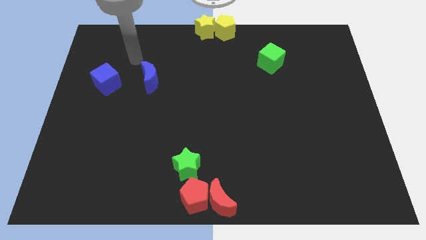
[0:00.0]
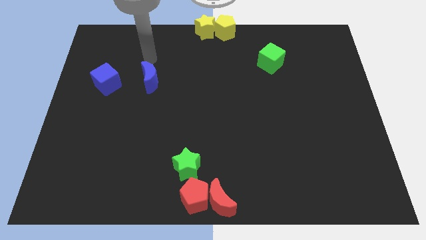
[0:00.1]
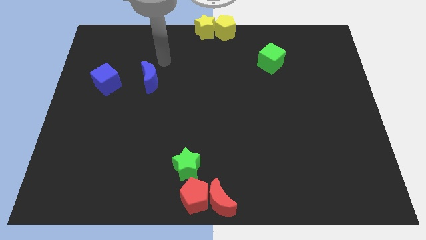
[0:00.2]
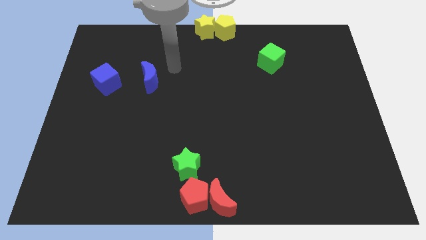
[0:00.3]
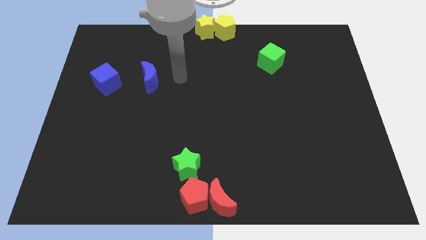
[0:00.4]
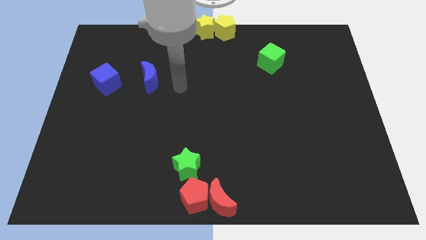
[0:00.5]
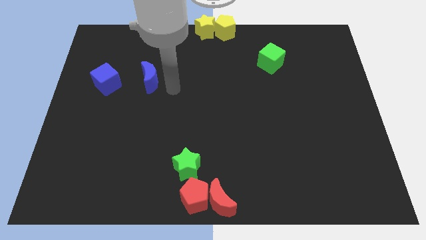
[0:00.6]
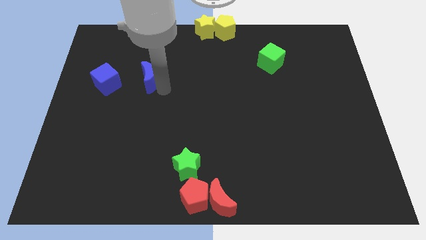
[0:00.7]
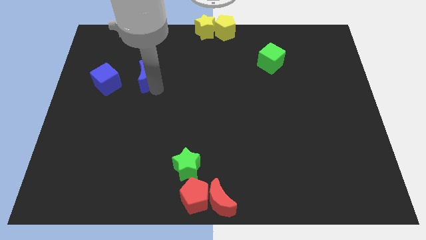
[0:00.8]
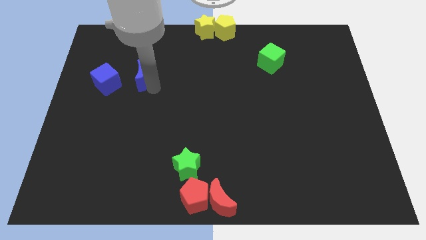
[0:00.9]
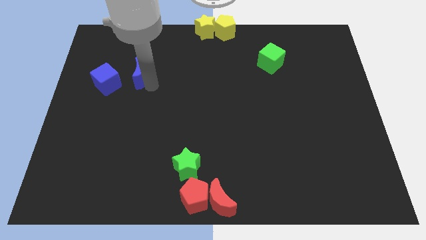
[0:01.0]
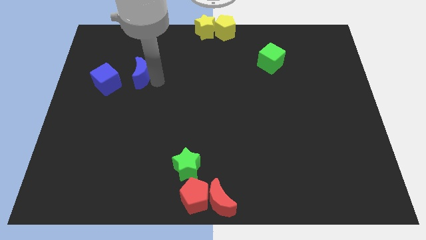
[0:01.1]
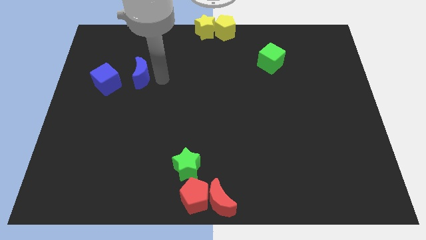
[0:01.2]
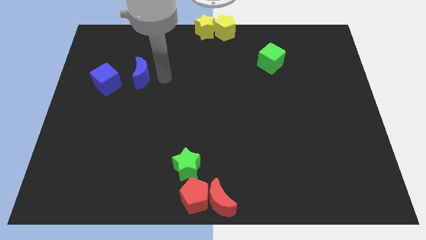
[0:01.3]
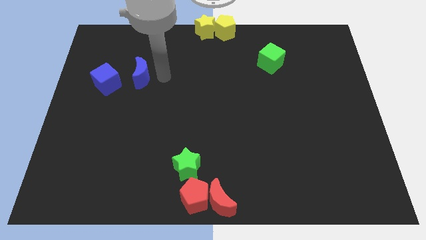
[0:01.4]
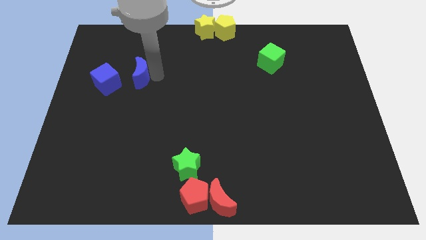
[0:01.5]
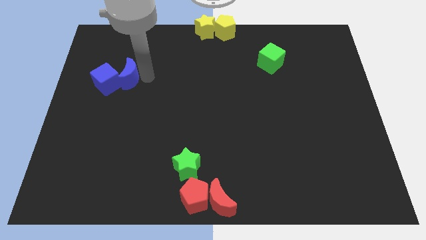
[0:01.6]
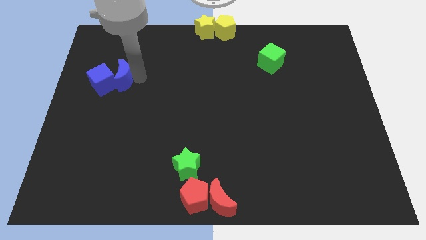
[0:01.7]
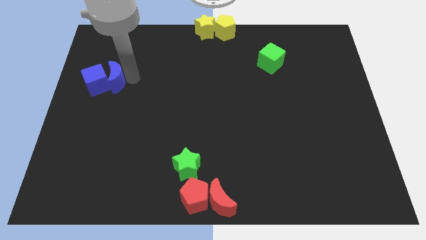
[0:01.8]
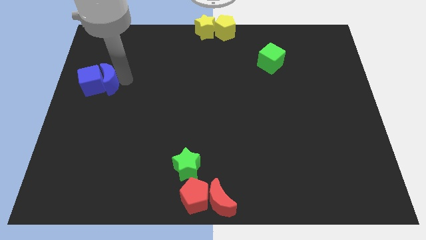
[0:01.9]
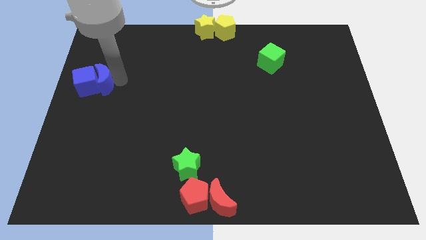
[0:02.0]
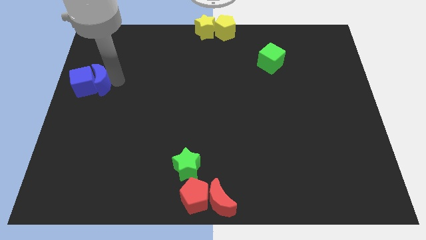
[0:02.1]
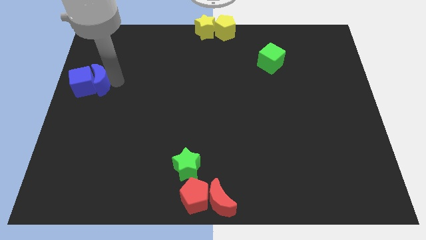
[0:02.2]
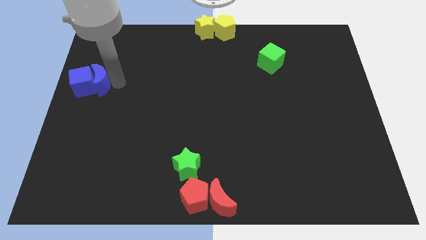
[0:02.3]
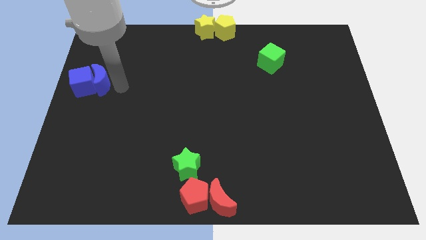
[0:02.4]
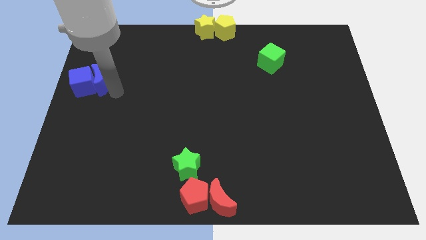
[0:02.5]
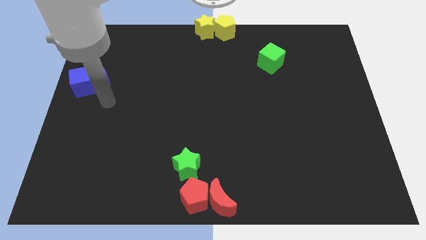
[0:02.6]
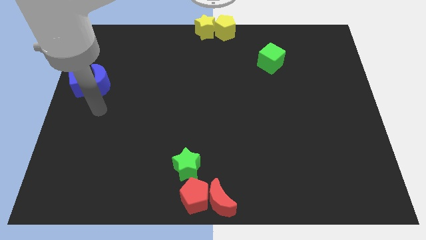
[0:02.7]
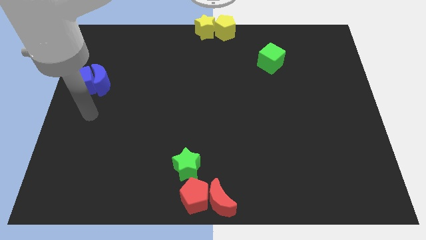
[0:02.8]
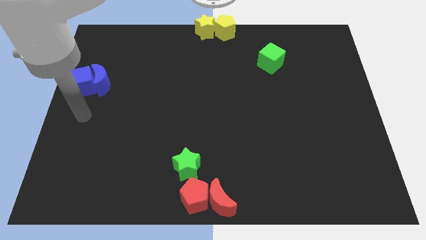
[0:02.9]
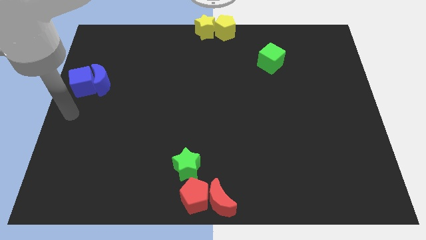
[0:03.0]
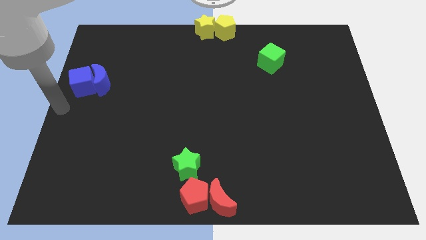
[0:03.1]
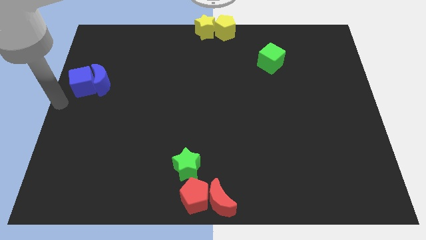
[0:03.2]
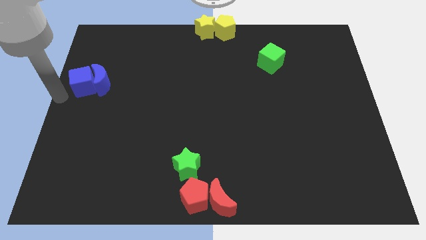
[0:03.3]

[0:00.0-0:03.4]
move the blue moon slightly into the blue cube to the left side of the board

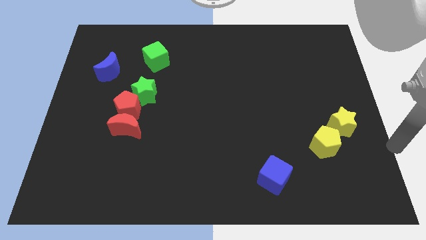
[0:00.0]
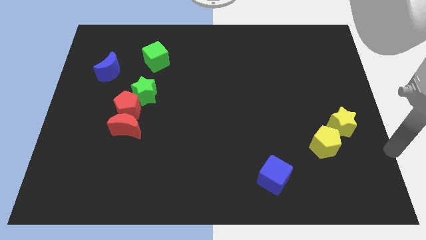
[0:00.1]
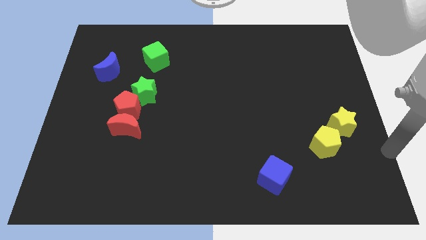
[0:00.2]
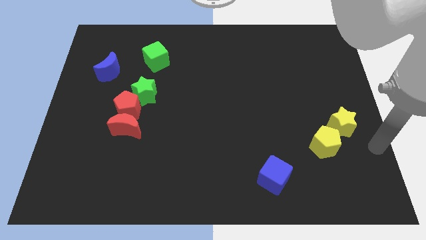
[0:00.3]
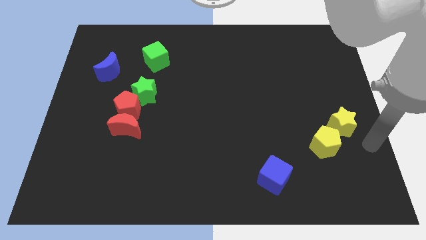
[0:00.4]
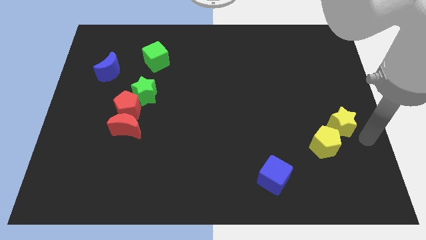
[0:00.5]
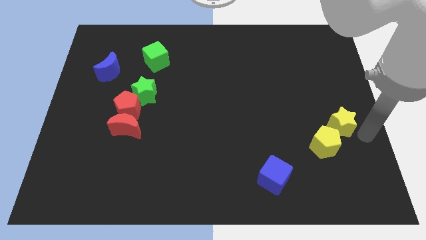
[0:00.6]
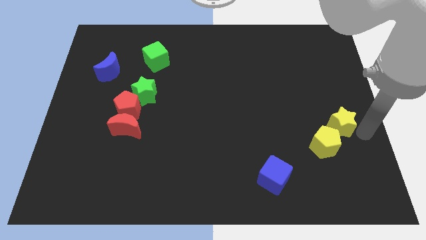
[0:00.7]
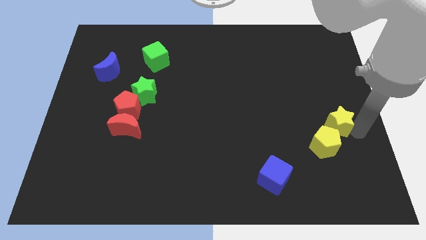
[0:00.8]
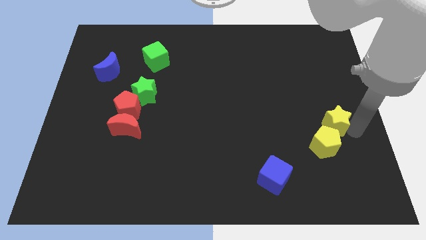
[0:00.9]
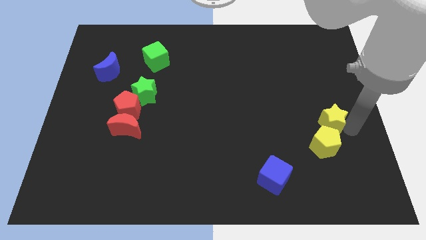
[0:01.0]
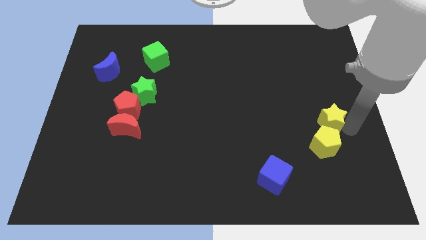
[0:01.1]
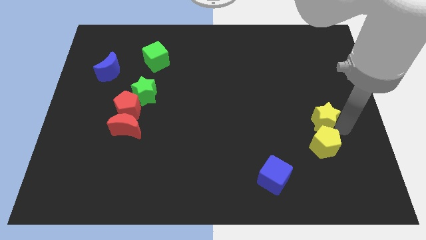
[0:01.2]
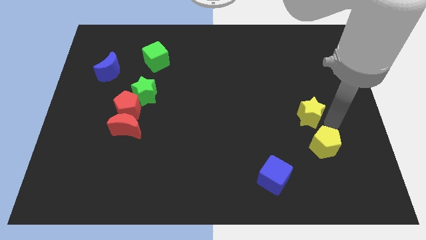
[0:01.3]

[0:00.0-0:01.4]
place the yellow star above the yellow pentagon

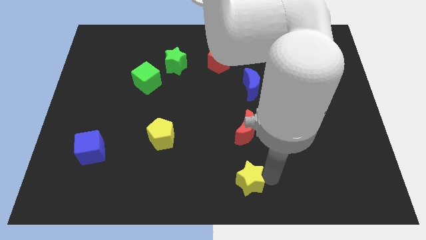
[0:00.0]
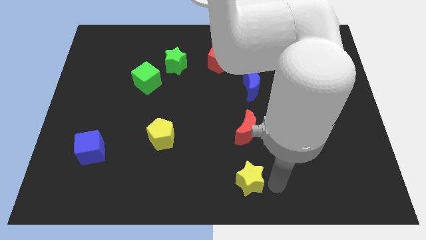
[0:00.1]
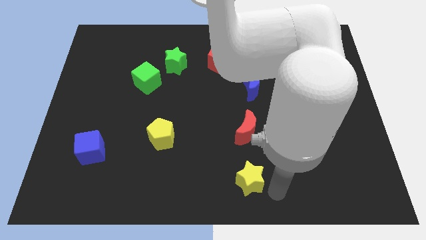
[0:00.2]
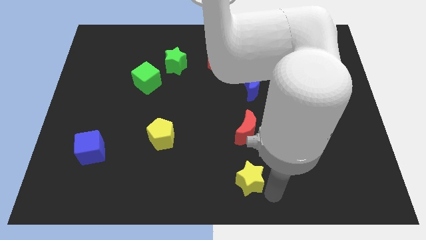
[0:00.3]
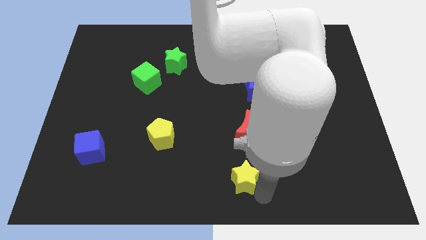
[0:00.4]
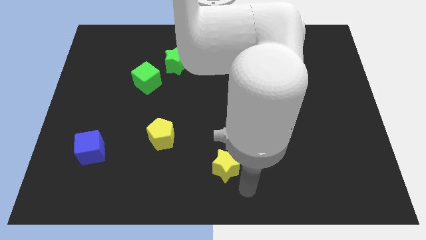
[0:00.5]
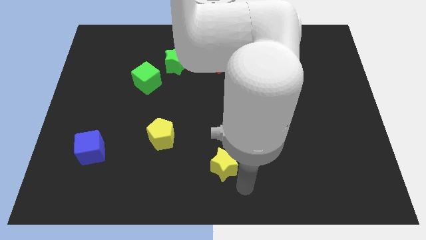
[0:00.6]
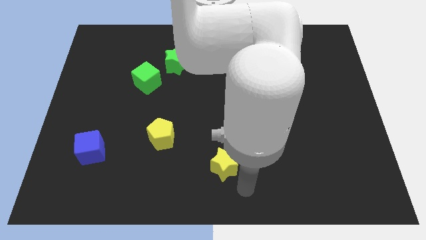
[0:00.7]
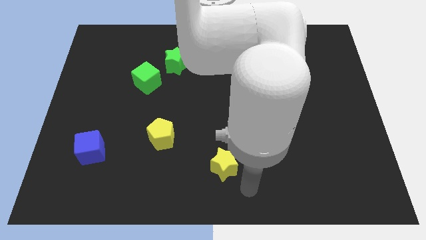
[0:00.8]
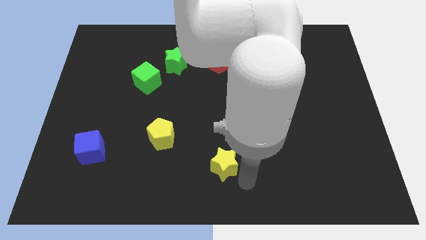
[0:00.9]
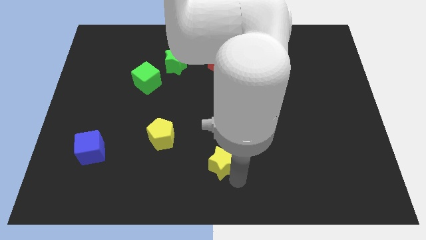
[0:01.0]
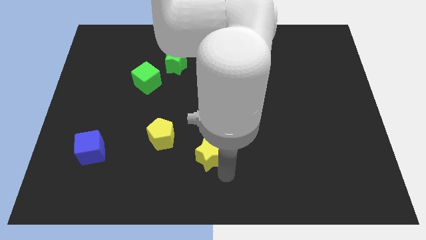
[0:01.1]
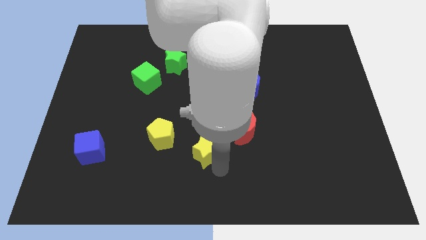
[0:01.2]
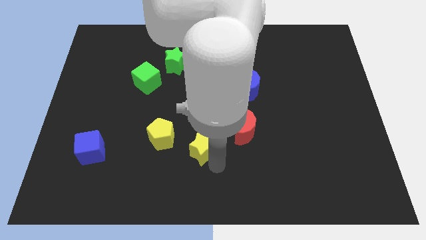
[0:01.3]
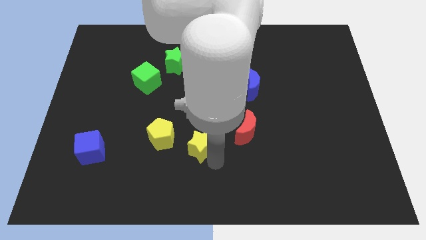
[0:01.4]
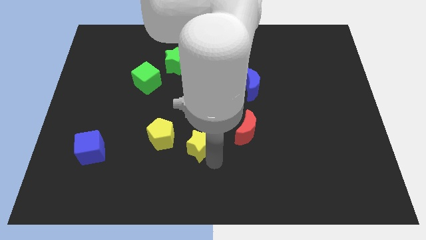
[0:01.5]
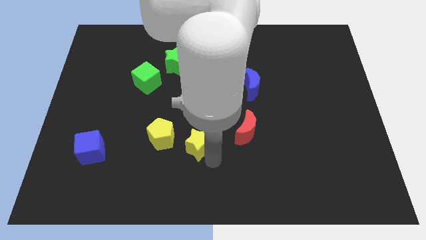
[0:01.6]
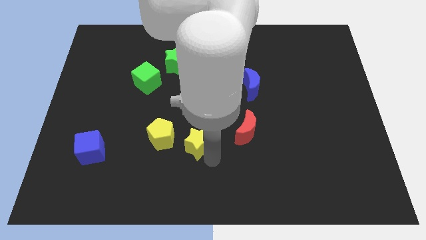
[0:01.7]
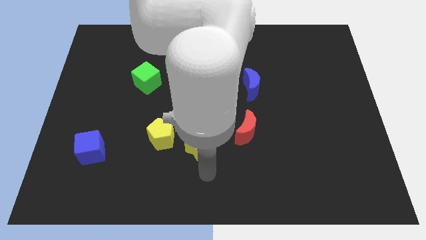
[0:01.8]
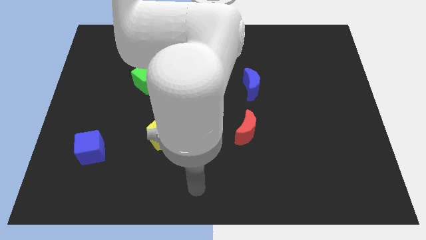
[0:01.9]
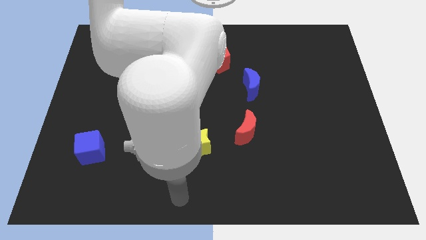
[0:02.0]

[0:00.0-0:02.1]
push the yellow star in between the red crescent and the yellow pentagon

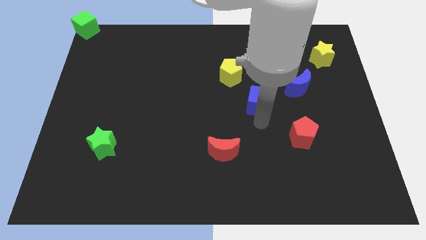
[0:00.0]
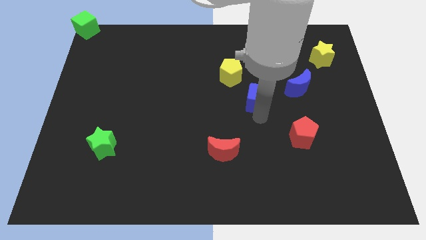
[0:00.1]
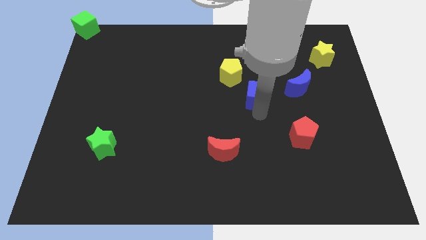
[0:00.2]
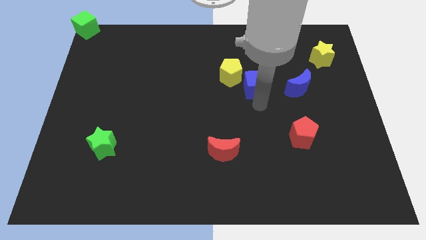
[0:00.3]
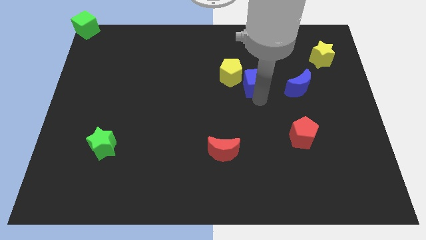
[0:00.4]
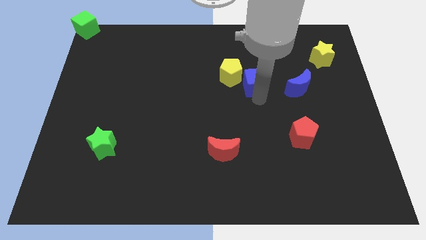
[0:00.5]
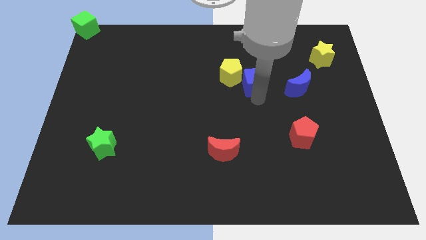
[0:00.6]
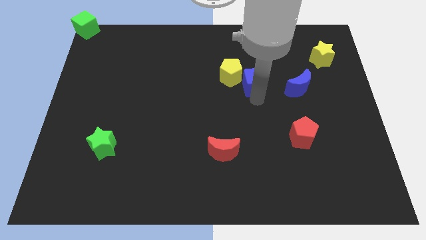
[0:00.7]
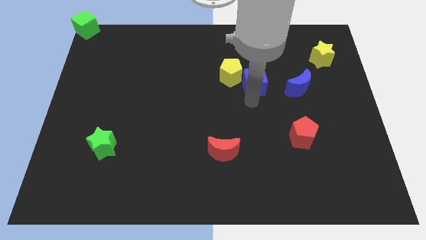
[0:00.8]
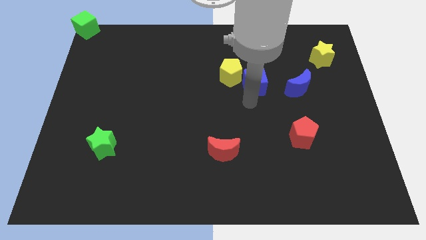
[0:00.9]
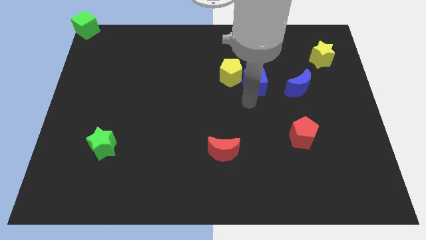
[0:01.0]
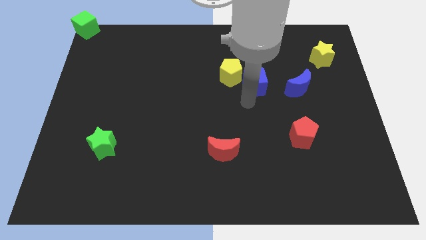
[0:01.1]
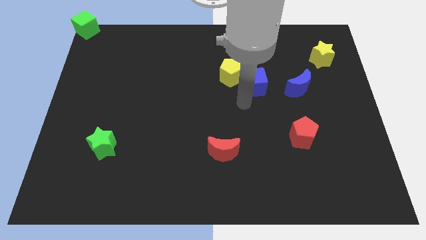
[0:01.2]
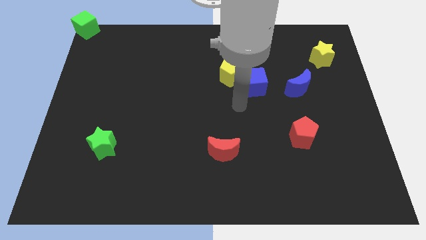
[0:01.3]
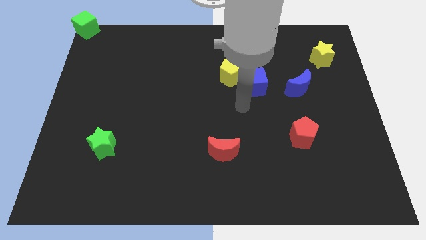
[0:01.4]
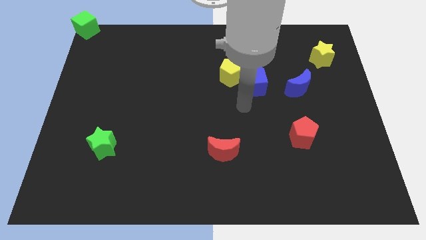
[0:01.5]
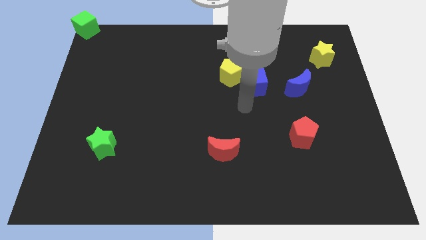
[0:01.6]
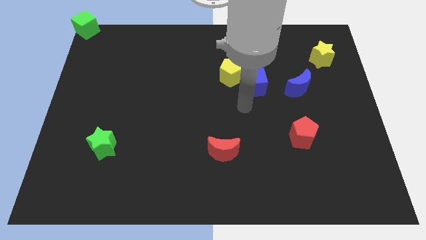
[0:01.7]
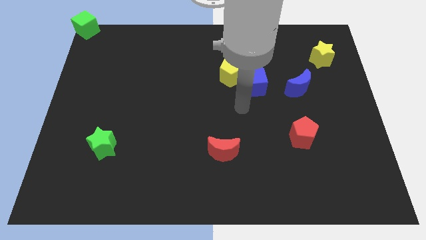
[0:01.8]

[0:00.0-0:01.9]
push blue cube slightly upwards

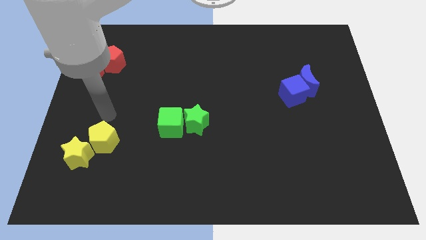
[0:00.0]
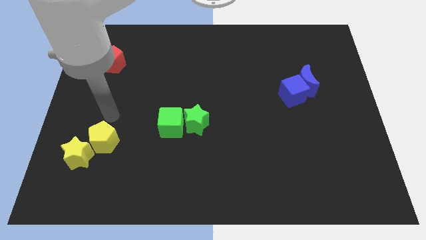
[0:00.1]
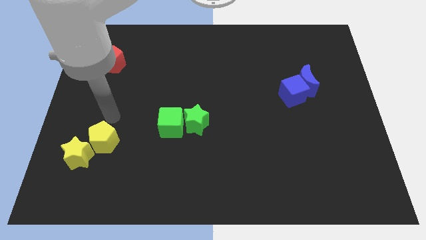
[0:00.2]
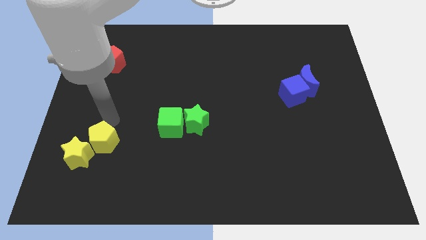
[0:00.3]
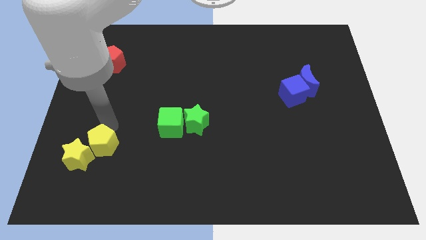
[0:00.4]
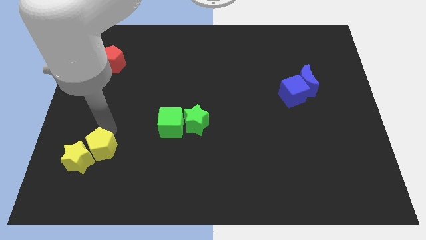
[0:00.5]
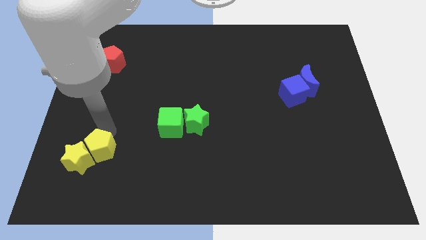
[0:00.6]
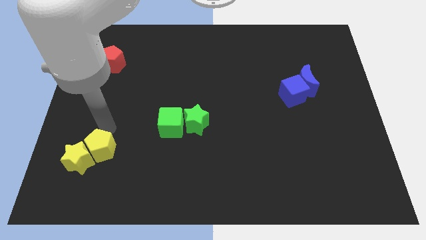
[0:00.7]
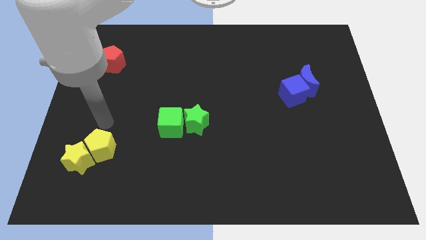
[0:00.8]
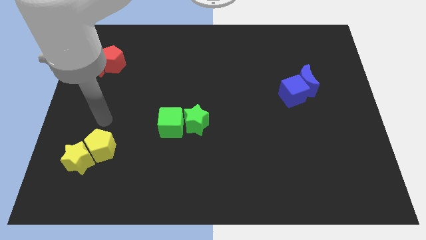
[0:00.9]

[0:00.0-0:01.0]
move yellow pentagon close to yellow star
